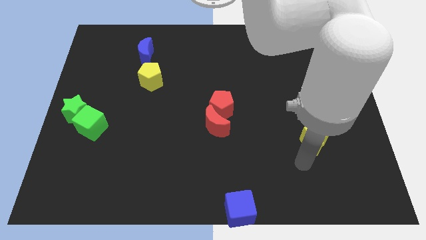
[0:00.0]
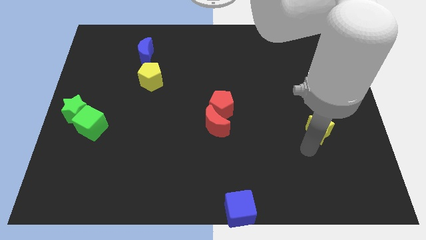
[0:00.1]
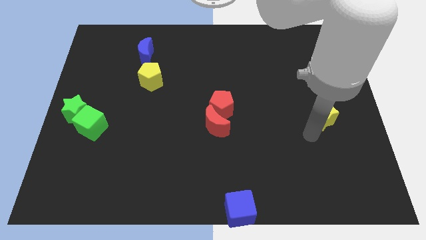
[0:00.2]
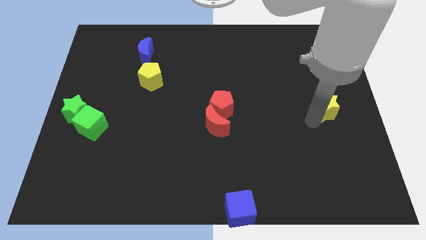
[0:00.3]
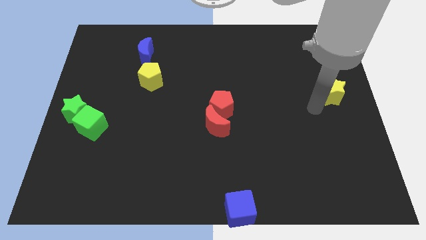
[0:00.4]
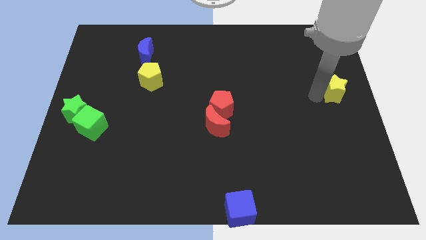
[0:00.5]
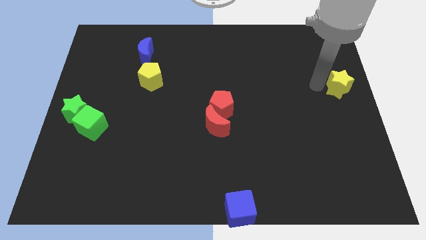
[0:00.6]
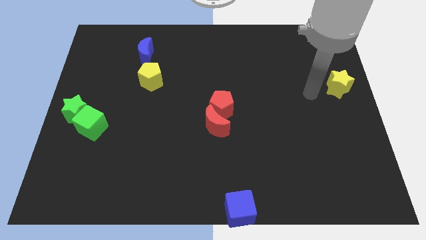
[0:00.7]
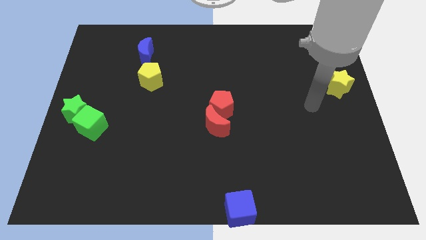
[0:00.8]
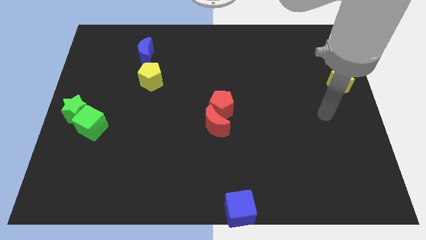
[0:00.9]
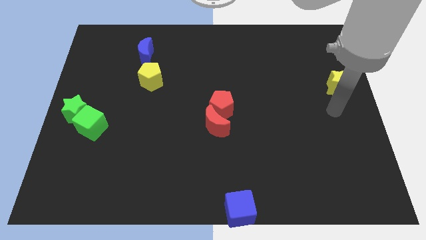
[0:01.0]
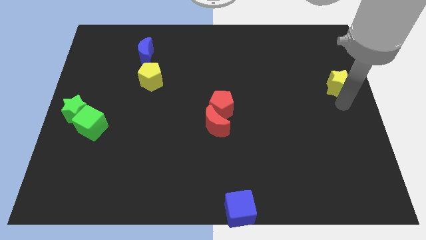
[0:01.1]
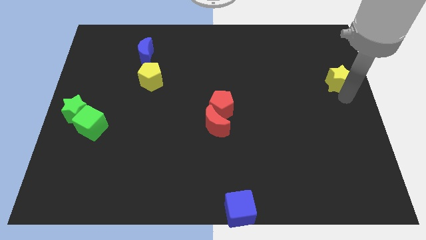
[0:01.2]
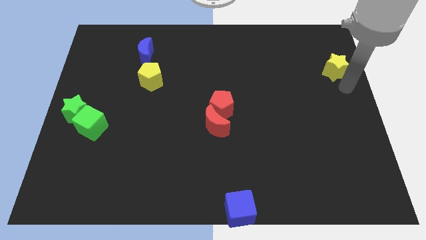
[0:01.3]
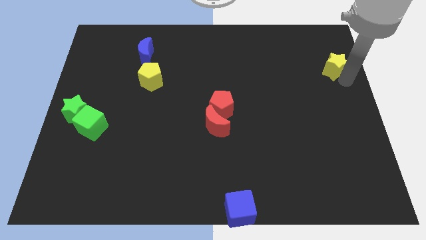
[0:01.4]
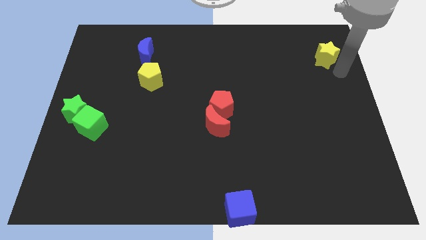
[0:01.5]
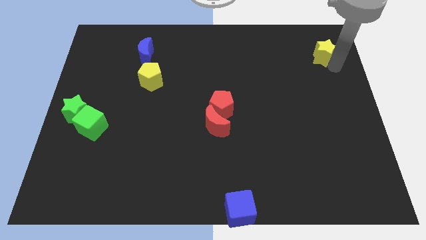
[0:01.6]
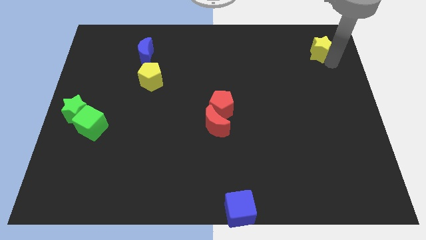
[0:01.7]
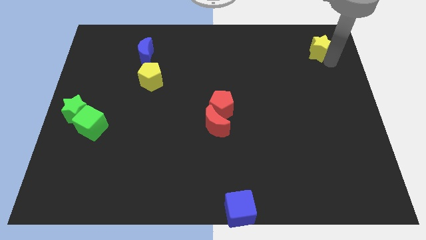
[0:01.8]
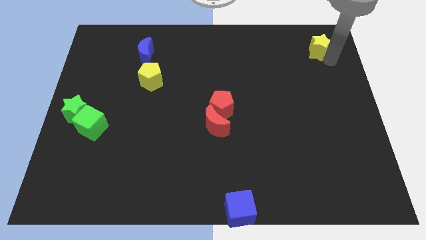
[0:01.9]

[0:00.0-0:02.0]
push the yellow star to the top right side

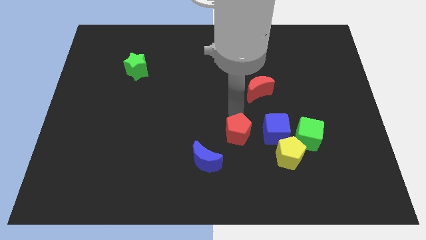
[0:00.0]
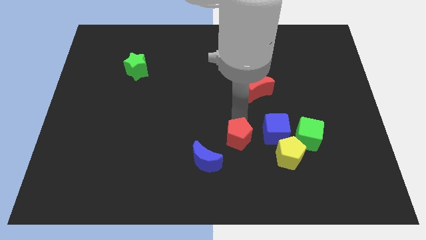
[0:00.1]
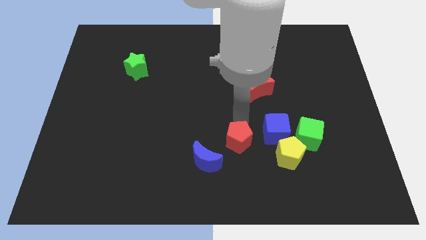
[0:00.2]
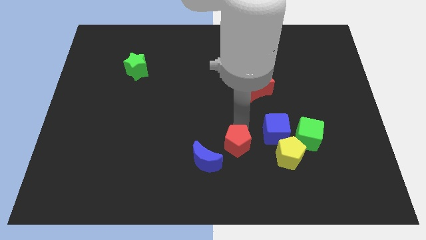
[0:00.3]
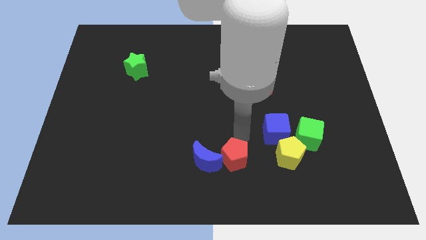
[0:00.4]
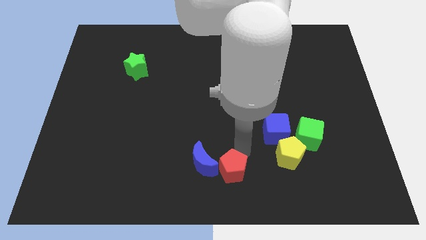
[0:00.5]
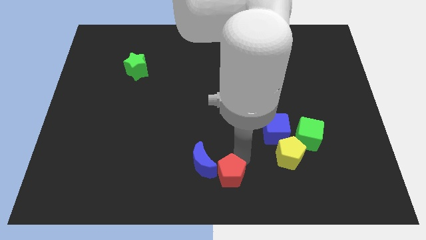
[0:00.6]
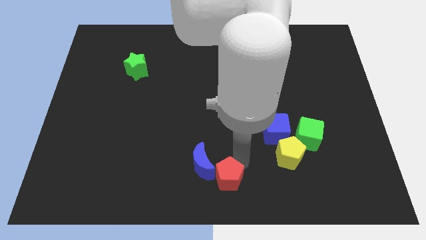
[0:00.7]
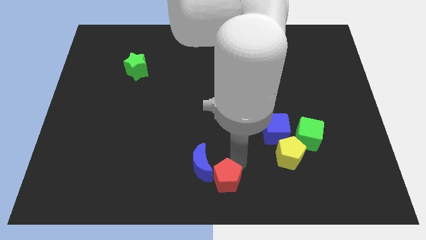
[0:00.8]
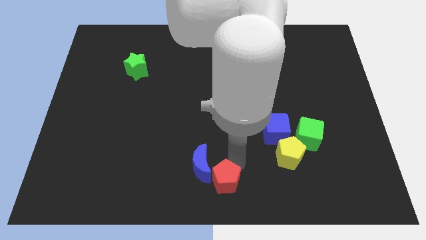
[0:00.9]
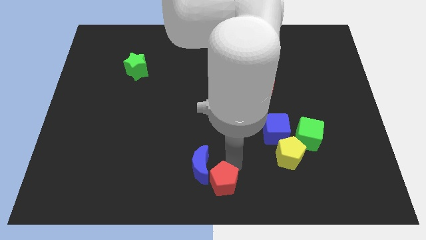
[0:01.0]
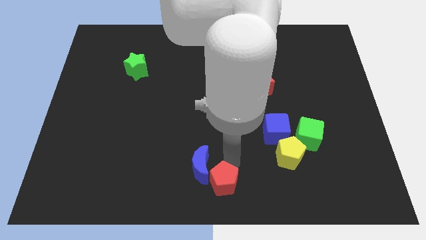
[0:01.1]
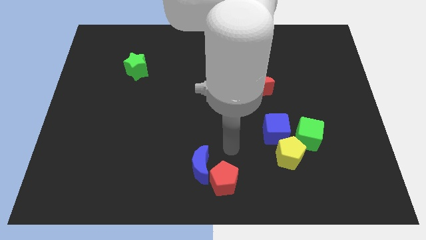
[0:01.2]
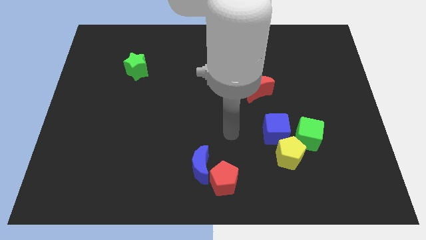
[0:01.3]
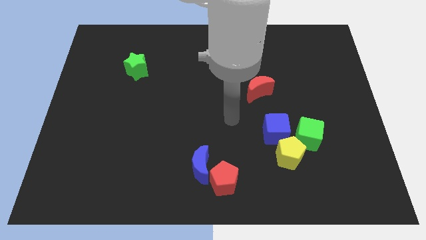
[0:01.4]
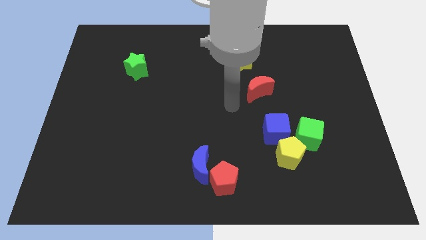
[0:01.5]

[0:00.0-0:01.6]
move the red pentagon into the blue crescent

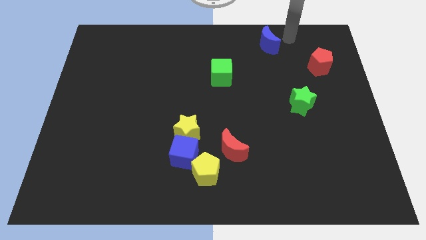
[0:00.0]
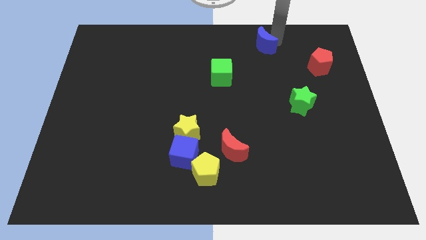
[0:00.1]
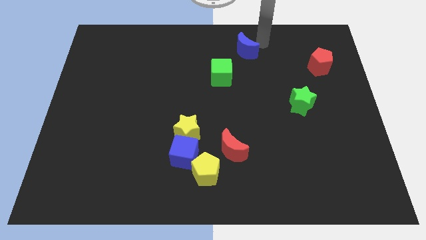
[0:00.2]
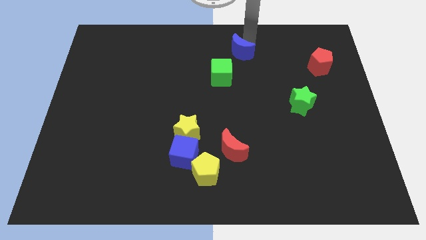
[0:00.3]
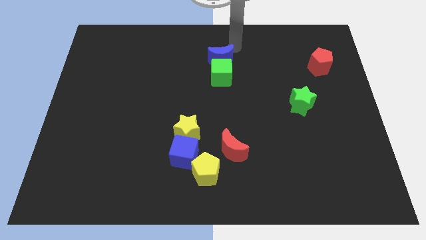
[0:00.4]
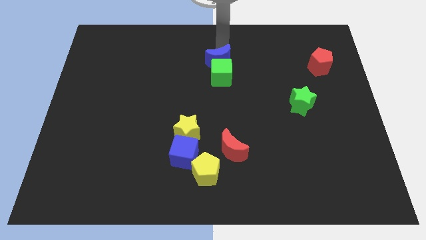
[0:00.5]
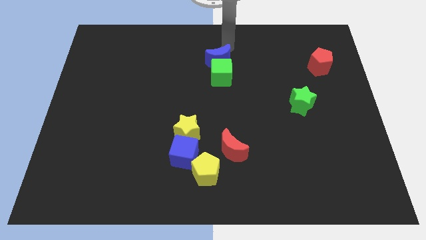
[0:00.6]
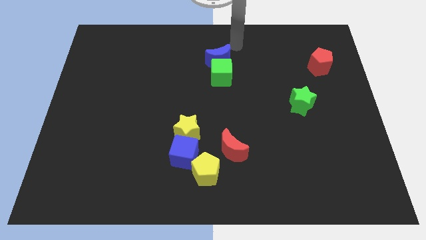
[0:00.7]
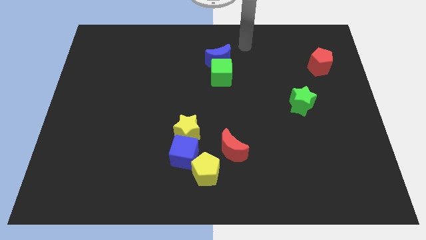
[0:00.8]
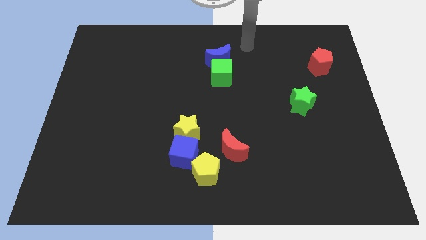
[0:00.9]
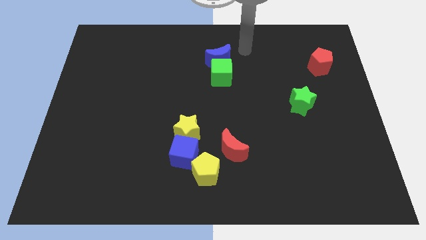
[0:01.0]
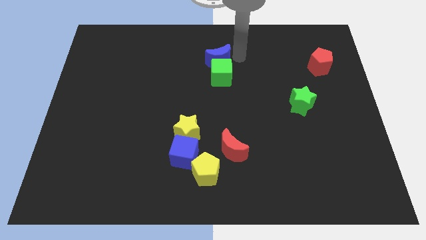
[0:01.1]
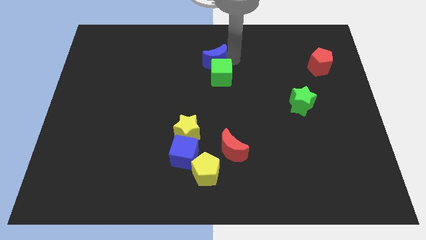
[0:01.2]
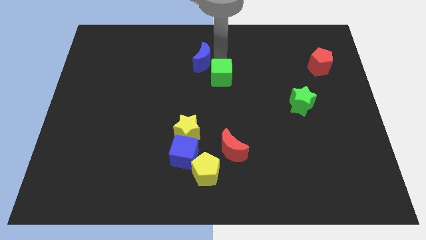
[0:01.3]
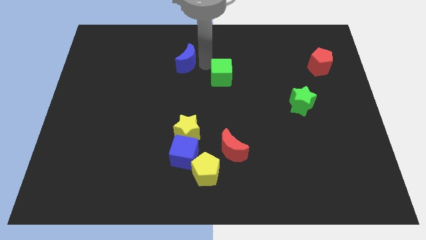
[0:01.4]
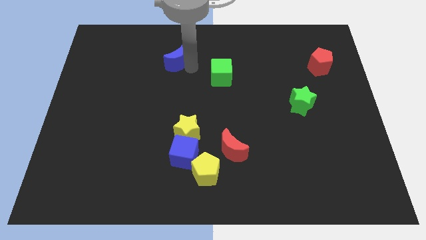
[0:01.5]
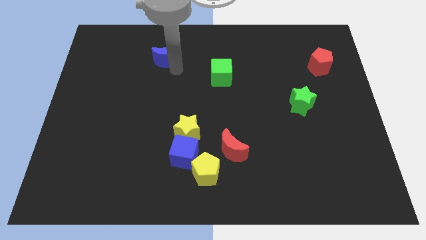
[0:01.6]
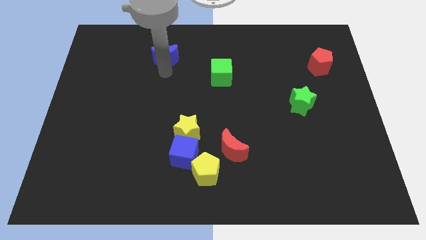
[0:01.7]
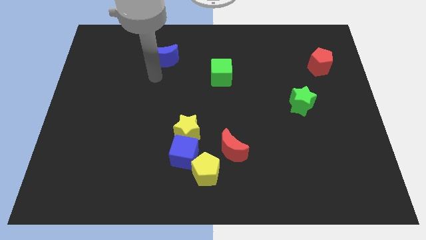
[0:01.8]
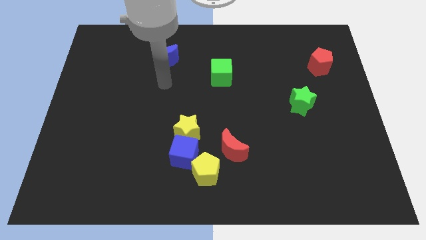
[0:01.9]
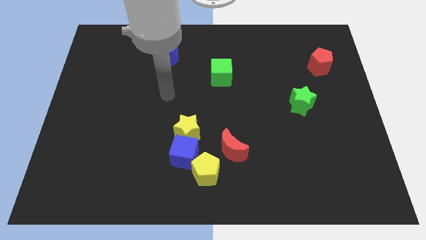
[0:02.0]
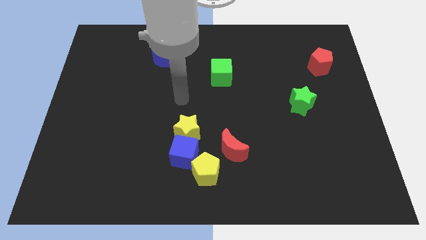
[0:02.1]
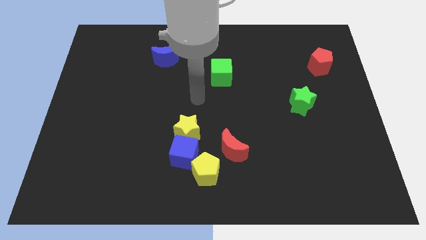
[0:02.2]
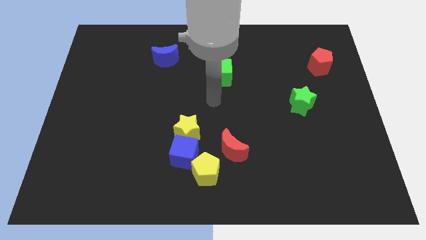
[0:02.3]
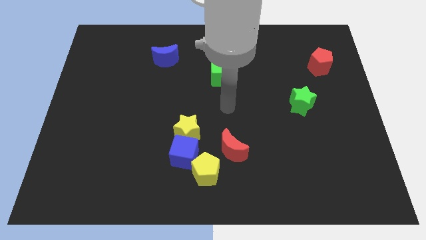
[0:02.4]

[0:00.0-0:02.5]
push blue crescent slightly towards left side

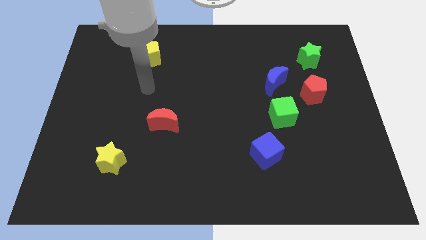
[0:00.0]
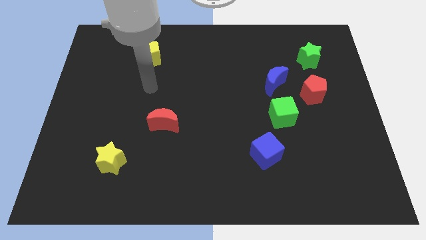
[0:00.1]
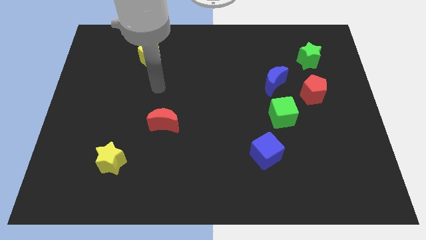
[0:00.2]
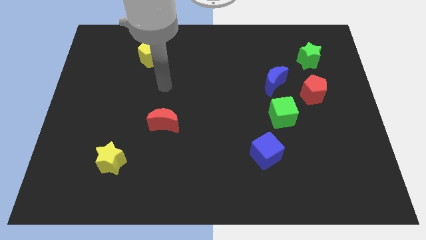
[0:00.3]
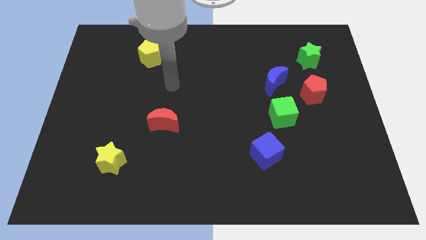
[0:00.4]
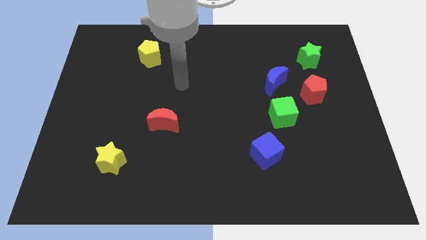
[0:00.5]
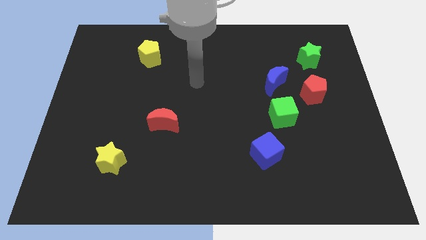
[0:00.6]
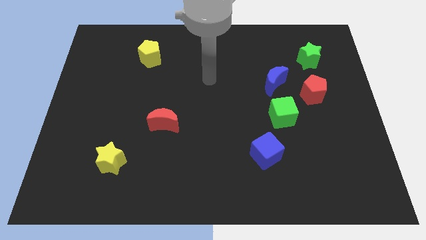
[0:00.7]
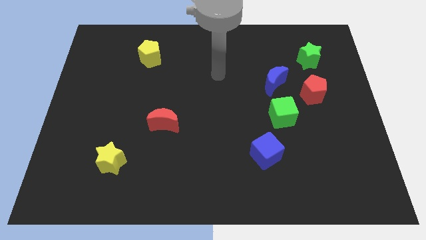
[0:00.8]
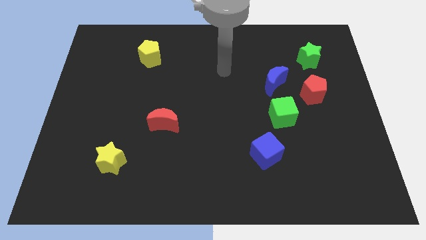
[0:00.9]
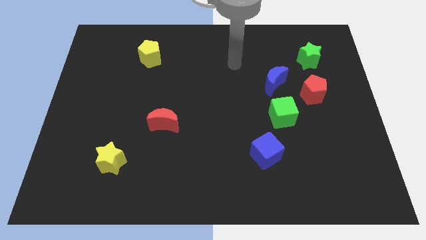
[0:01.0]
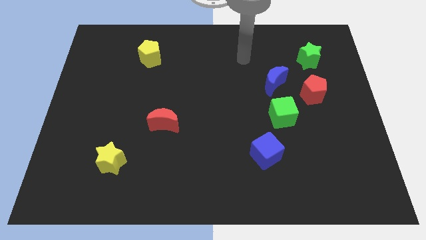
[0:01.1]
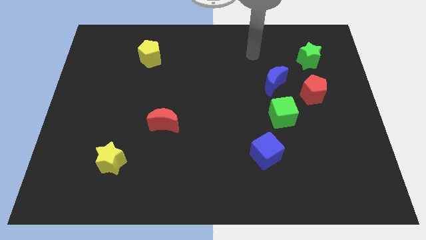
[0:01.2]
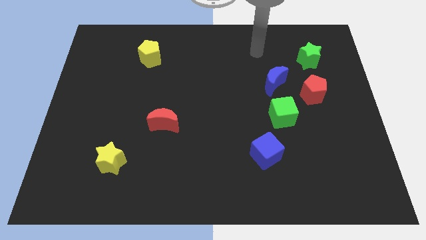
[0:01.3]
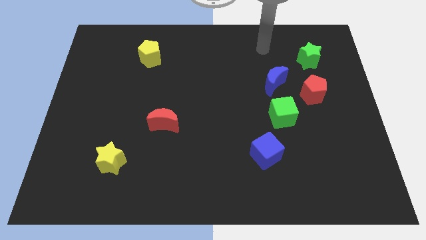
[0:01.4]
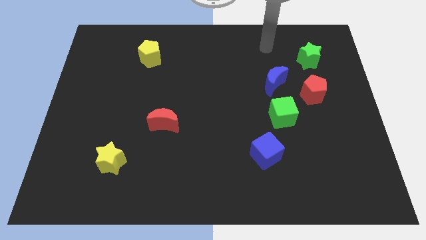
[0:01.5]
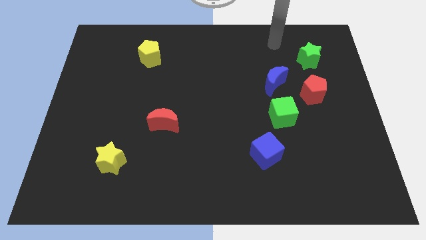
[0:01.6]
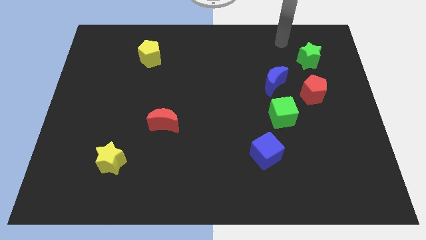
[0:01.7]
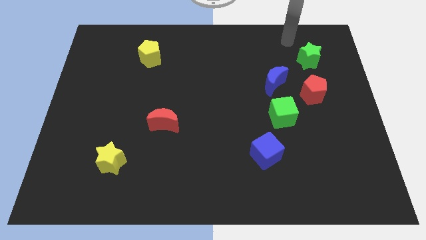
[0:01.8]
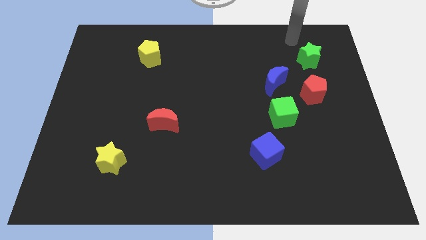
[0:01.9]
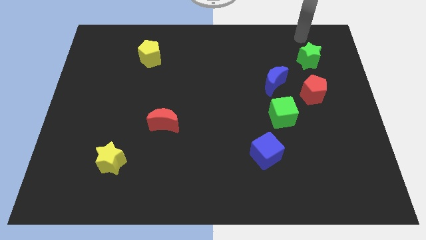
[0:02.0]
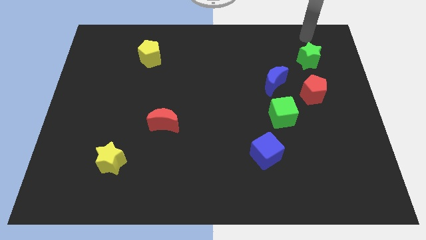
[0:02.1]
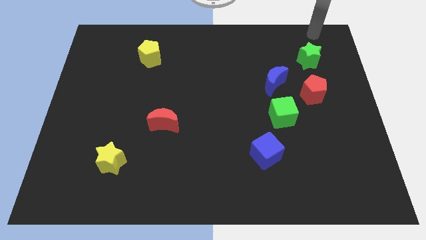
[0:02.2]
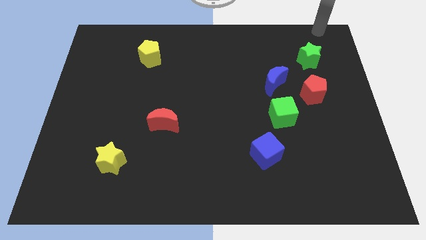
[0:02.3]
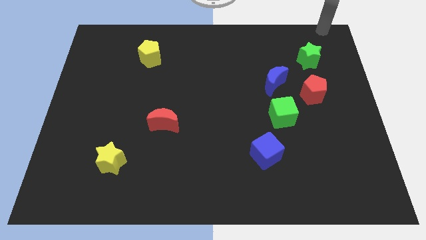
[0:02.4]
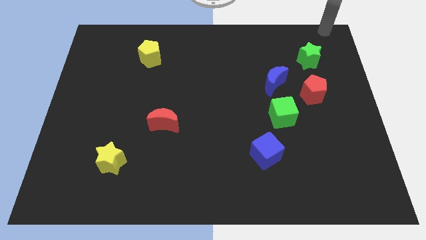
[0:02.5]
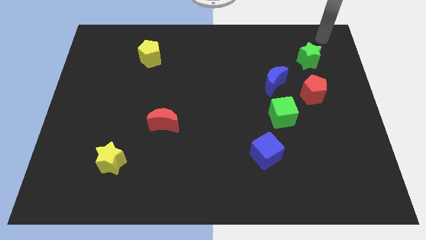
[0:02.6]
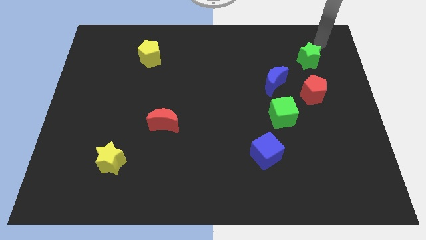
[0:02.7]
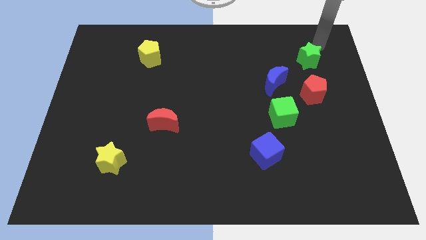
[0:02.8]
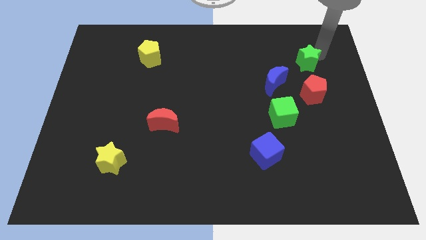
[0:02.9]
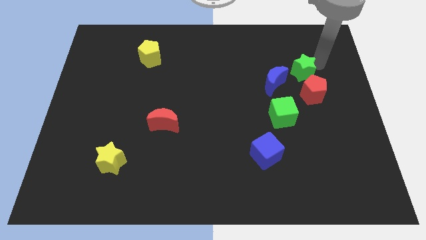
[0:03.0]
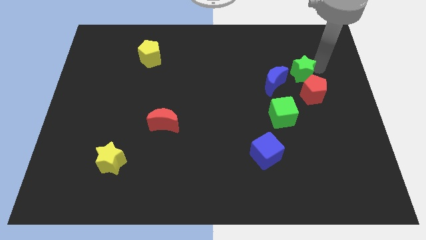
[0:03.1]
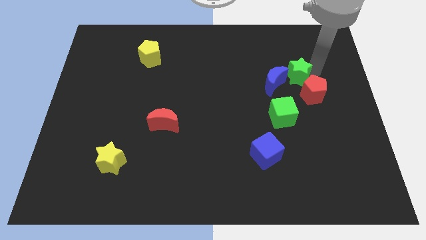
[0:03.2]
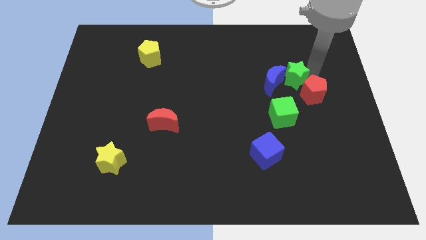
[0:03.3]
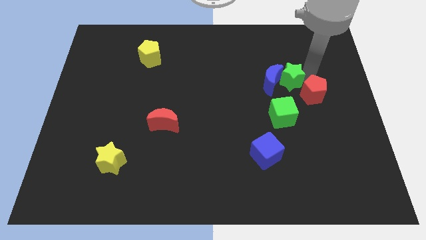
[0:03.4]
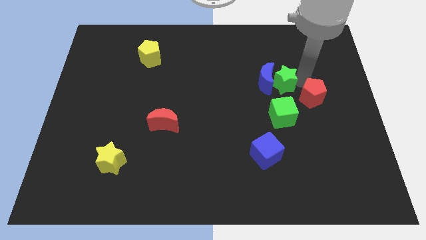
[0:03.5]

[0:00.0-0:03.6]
push the green star into the right side of the blue crescent
